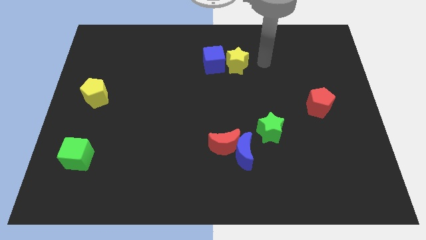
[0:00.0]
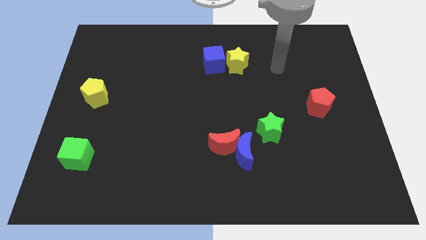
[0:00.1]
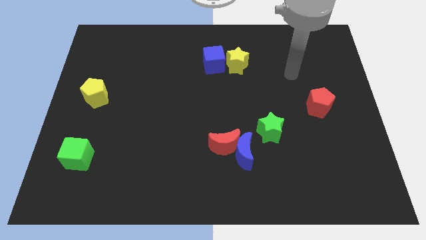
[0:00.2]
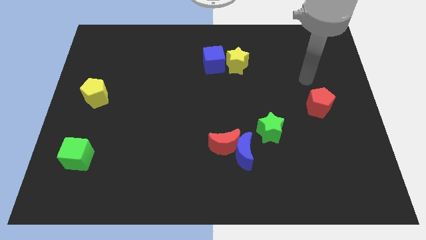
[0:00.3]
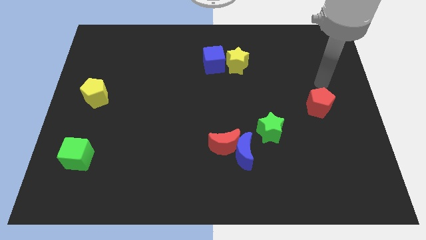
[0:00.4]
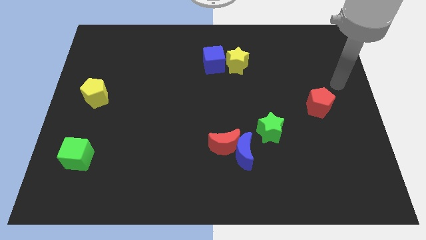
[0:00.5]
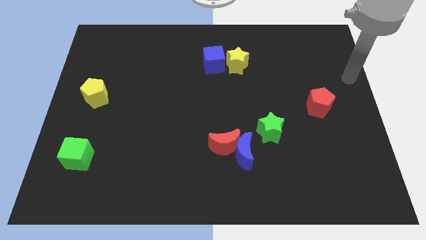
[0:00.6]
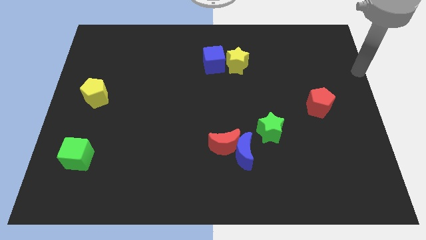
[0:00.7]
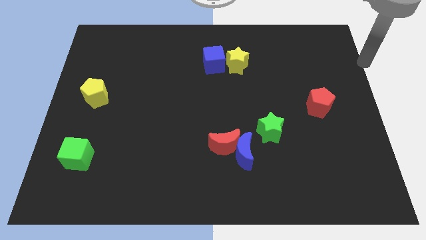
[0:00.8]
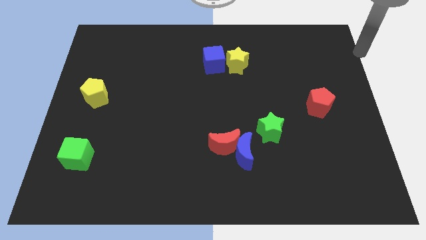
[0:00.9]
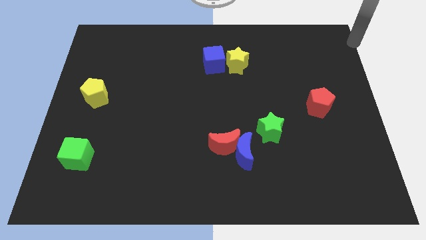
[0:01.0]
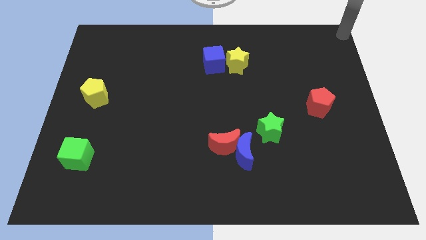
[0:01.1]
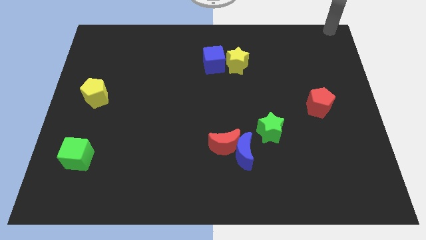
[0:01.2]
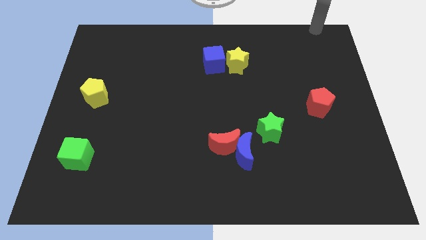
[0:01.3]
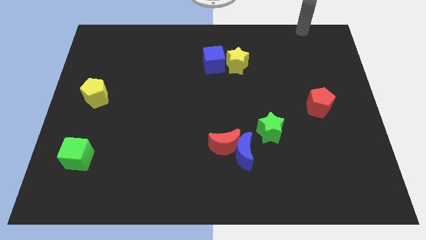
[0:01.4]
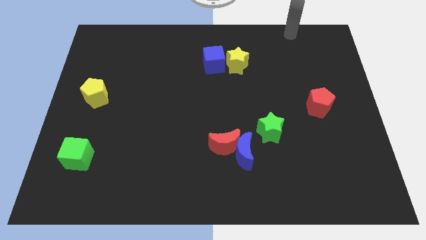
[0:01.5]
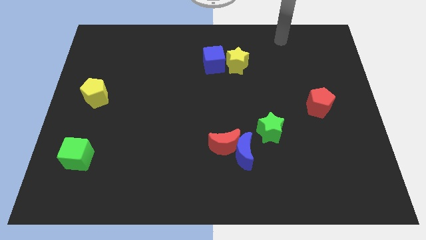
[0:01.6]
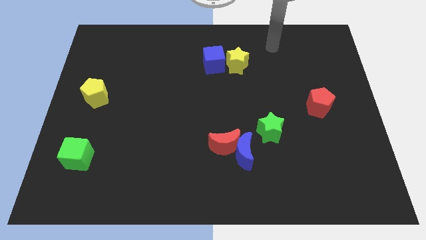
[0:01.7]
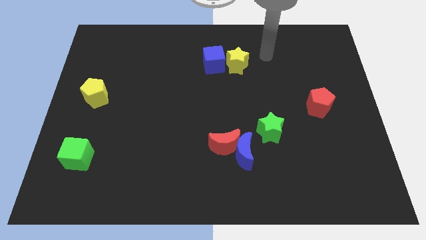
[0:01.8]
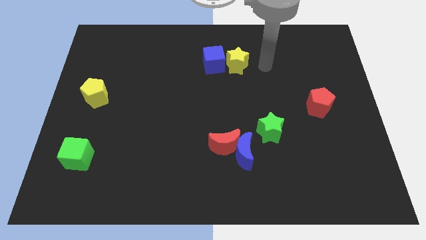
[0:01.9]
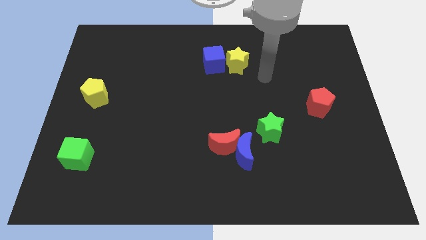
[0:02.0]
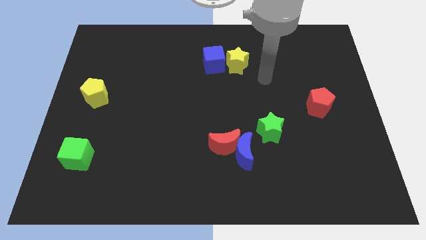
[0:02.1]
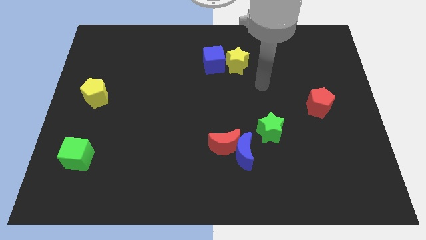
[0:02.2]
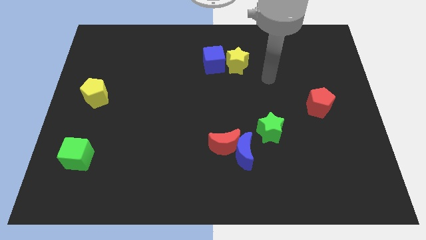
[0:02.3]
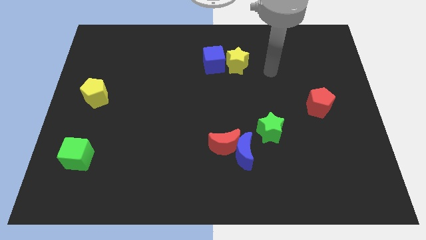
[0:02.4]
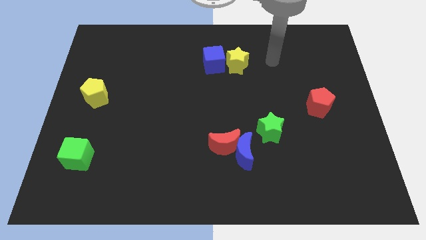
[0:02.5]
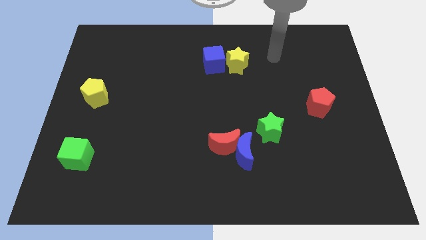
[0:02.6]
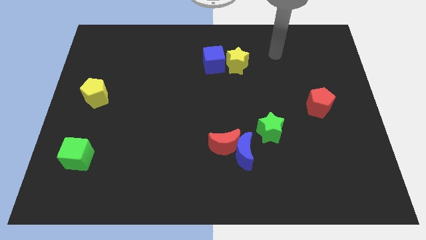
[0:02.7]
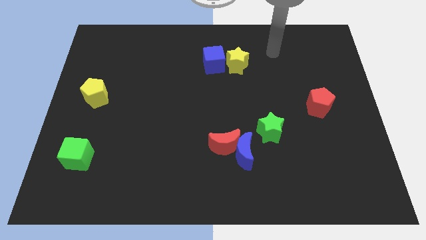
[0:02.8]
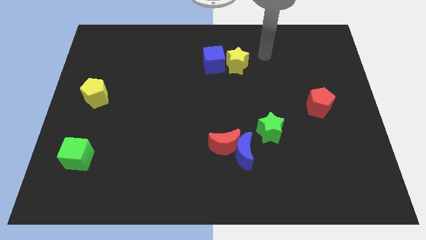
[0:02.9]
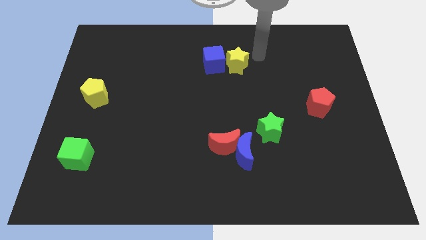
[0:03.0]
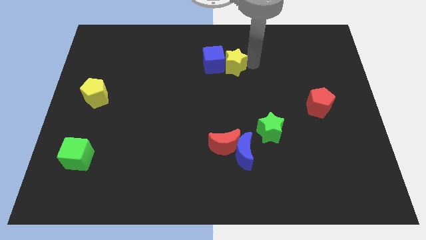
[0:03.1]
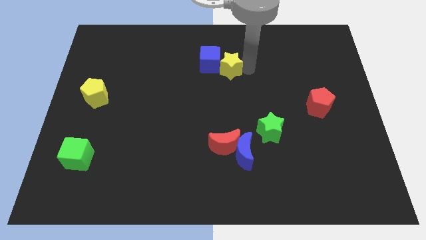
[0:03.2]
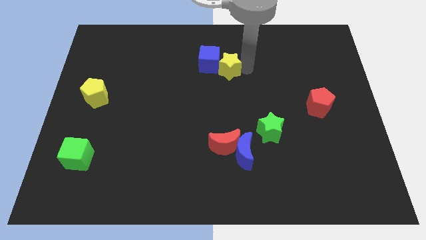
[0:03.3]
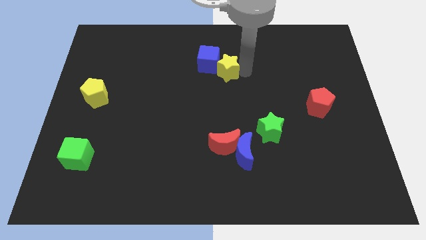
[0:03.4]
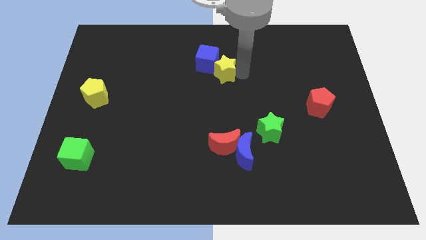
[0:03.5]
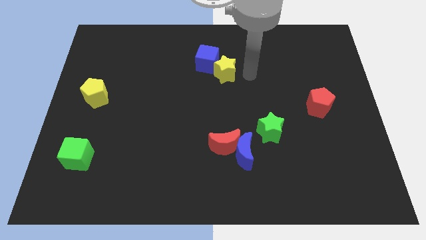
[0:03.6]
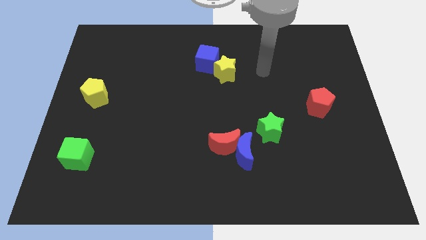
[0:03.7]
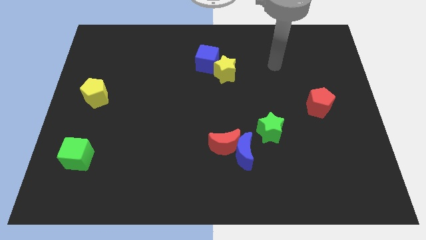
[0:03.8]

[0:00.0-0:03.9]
slightly push the yellow star to the left side of the board

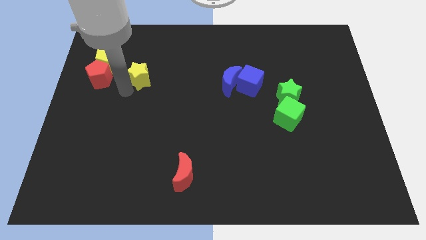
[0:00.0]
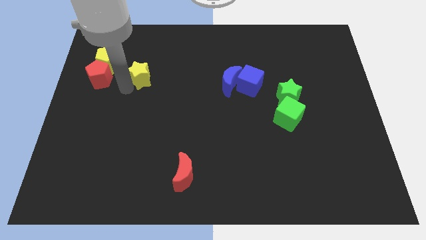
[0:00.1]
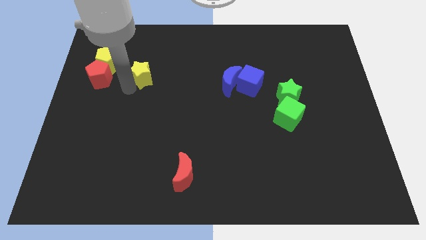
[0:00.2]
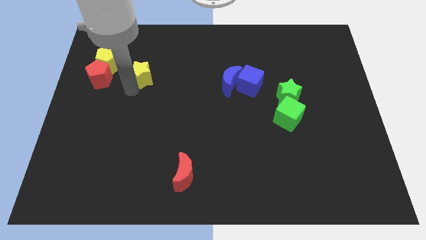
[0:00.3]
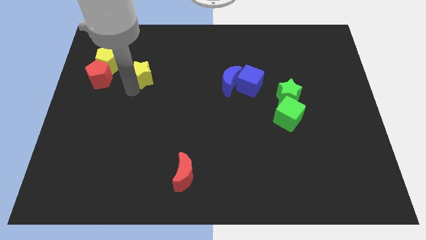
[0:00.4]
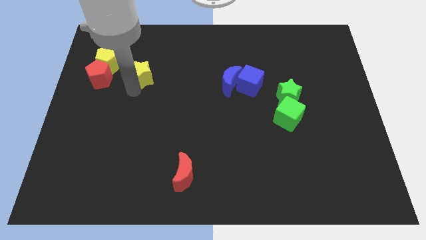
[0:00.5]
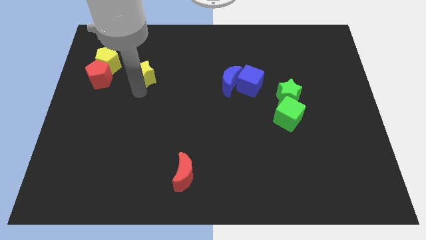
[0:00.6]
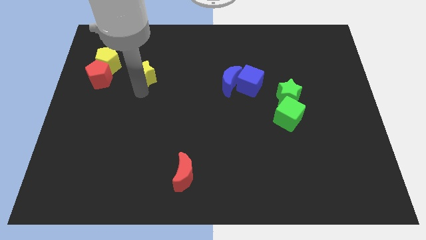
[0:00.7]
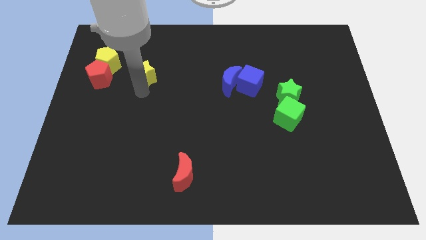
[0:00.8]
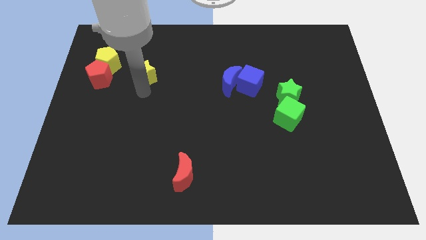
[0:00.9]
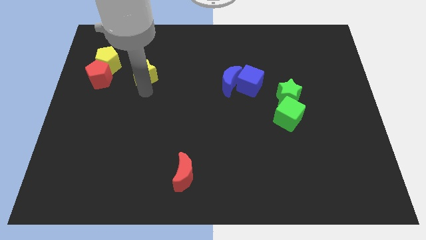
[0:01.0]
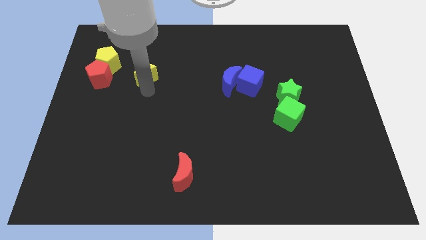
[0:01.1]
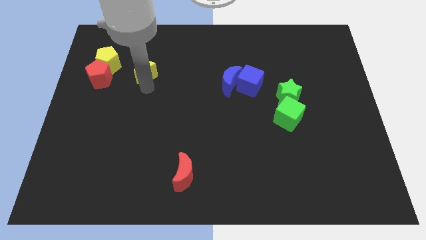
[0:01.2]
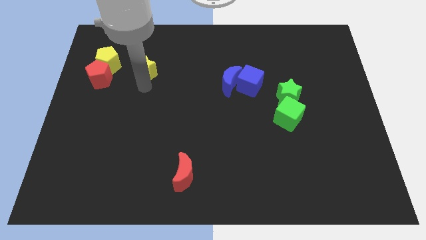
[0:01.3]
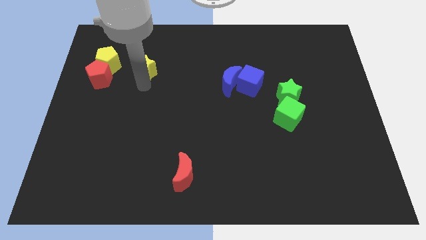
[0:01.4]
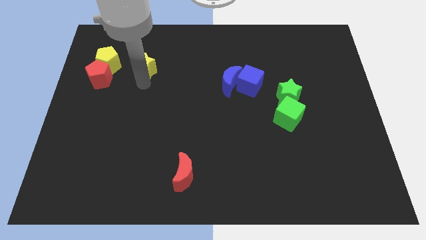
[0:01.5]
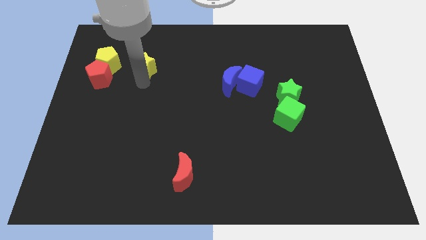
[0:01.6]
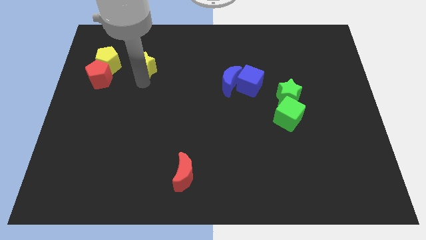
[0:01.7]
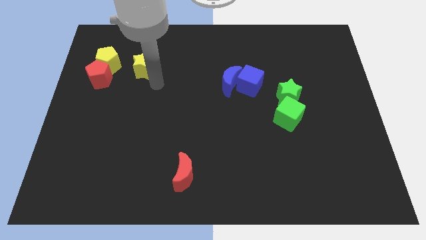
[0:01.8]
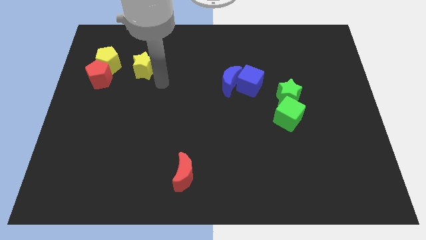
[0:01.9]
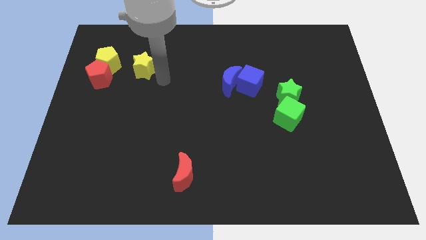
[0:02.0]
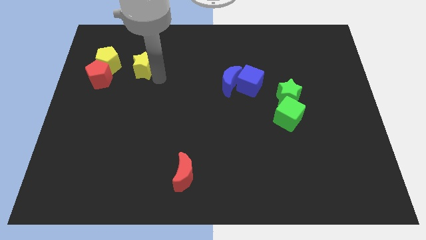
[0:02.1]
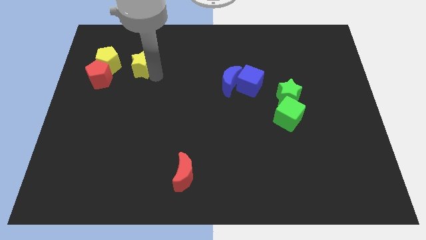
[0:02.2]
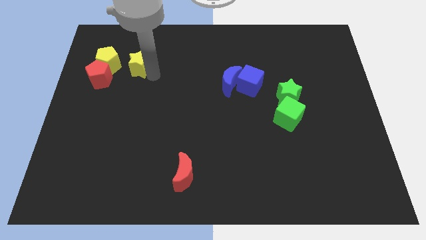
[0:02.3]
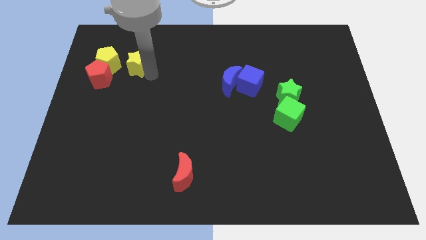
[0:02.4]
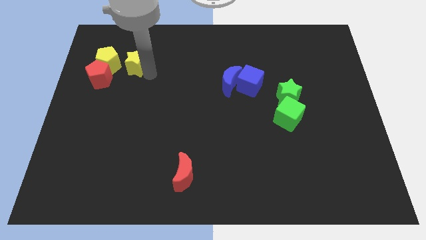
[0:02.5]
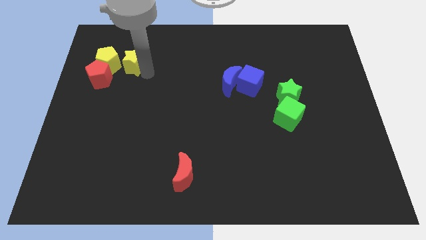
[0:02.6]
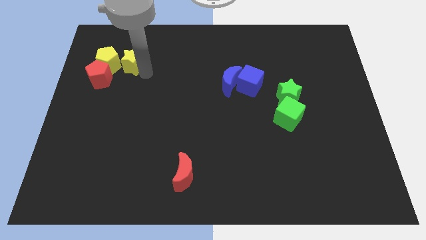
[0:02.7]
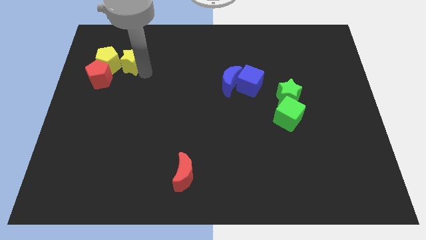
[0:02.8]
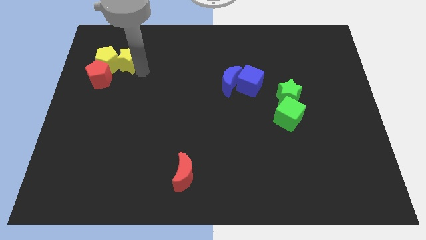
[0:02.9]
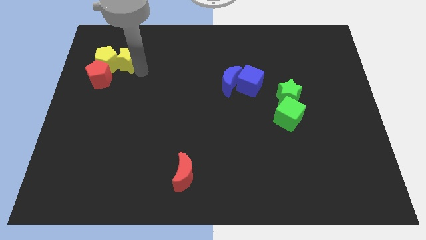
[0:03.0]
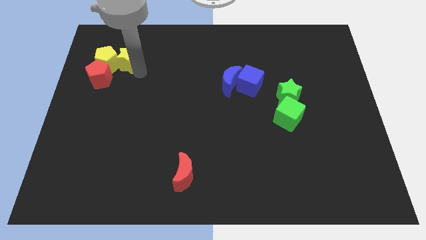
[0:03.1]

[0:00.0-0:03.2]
move the yellow star right to the yellow pentagon

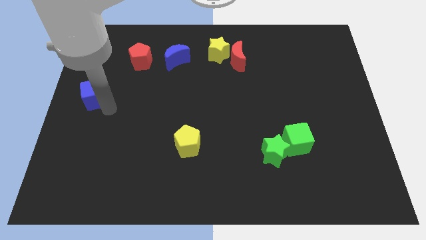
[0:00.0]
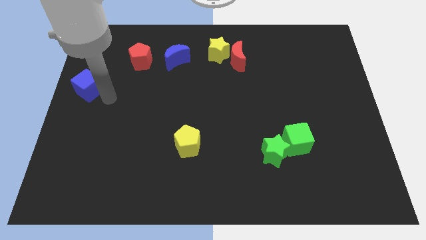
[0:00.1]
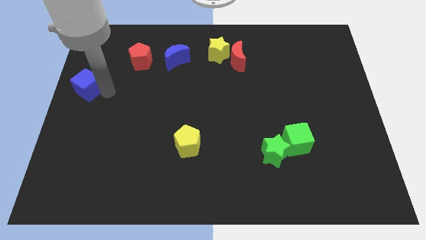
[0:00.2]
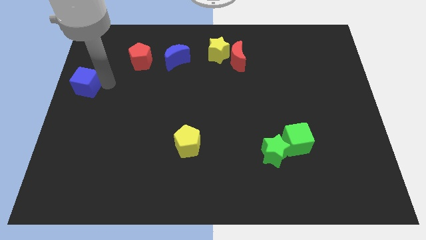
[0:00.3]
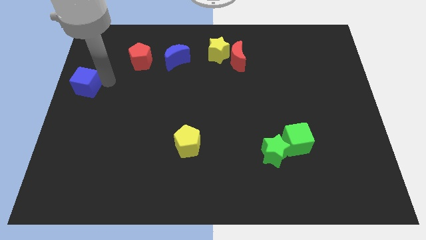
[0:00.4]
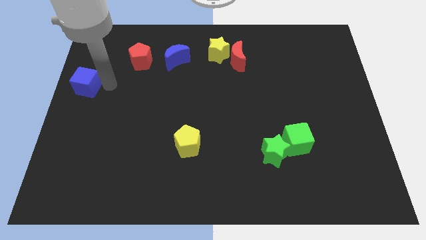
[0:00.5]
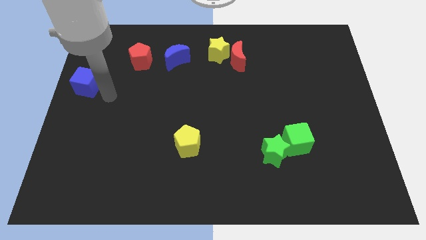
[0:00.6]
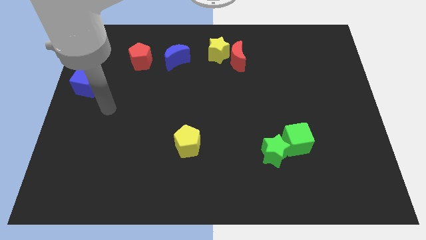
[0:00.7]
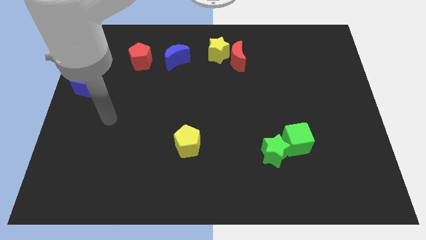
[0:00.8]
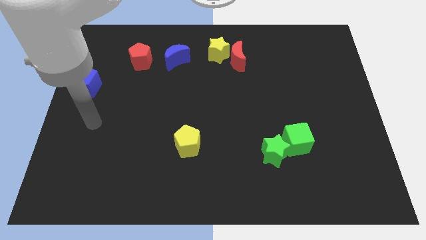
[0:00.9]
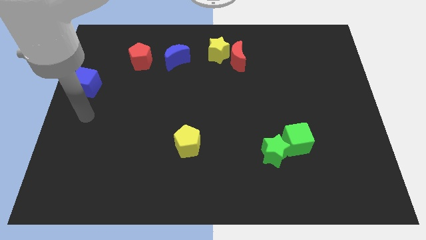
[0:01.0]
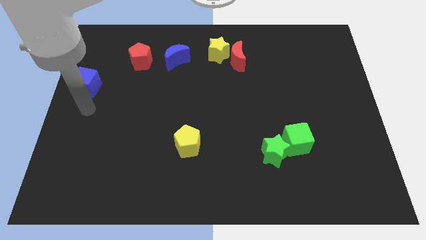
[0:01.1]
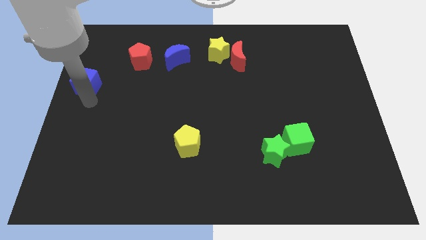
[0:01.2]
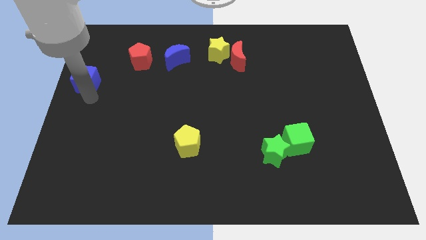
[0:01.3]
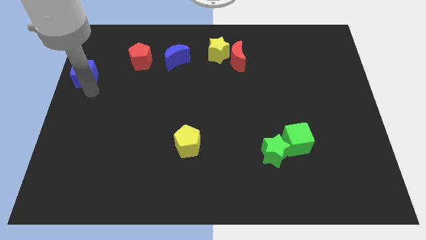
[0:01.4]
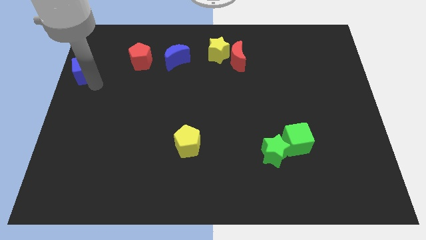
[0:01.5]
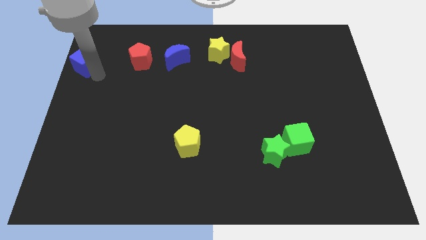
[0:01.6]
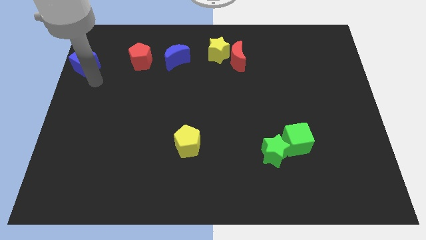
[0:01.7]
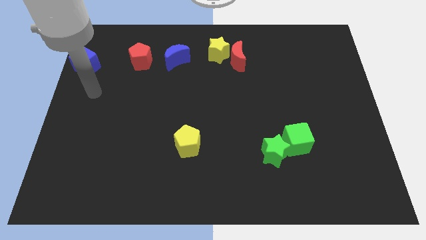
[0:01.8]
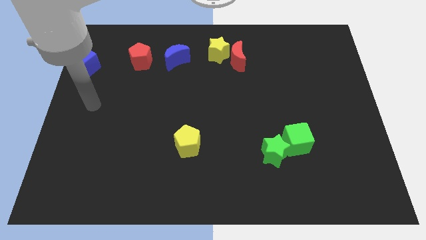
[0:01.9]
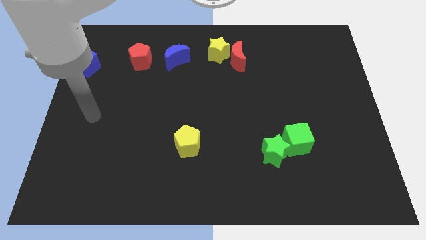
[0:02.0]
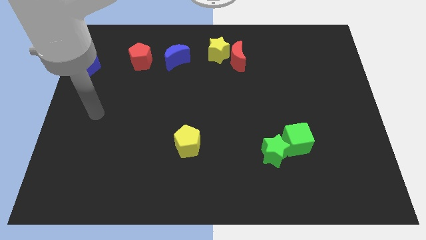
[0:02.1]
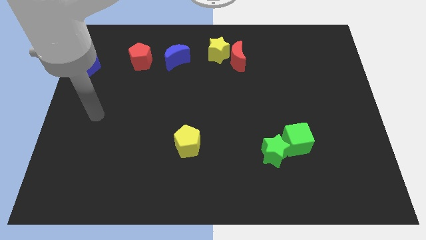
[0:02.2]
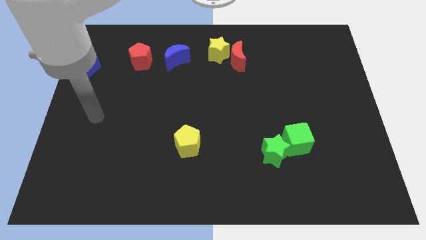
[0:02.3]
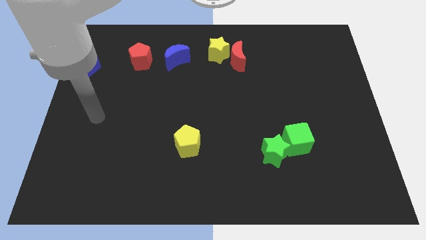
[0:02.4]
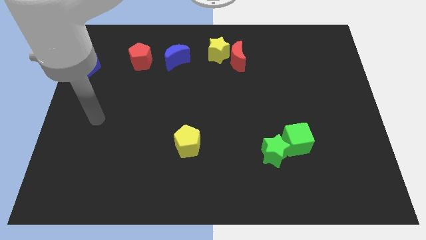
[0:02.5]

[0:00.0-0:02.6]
move the blue cube to the left of the red pentagon
